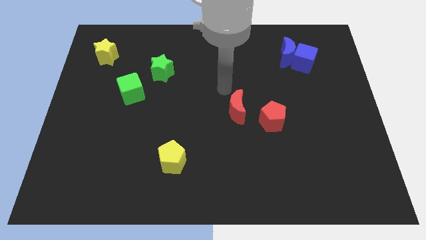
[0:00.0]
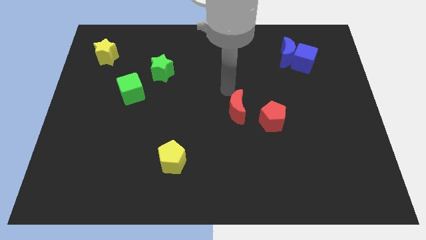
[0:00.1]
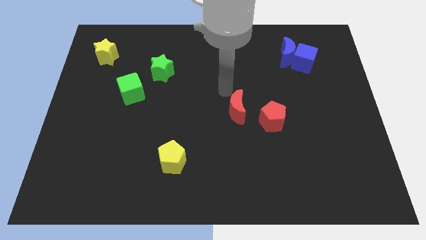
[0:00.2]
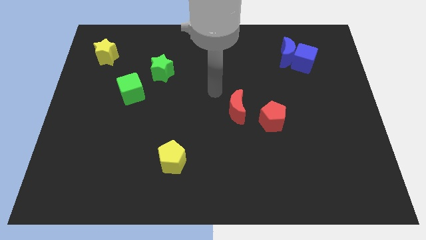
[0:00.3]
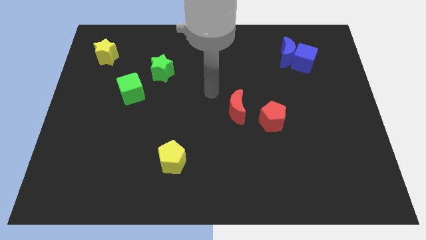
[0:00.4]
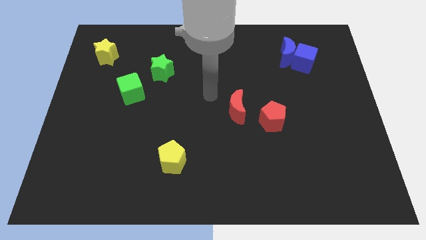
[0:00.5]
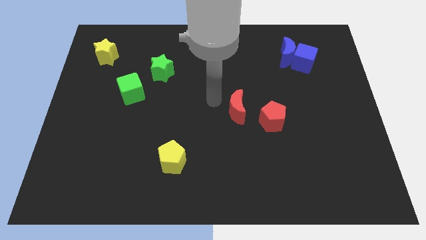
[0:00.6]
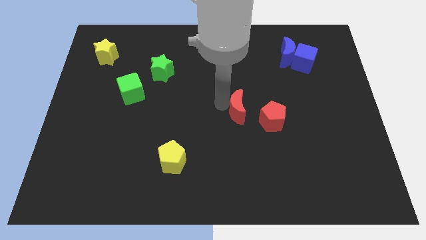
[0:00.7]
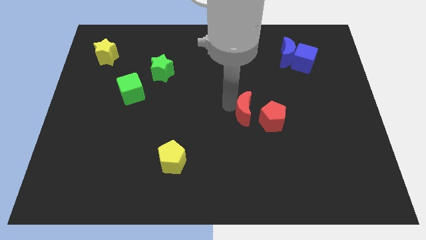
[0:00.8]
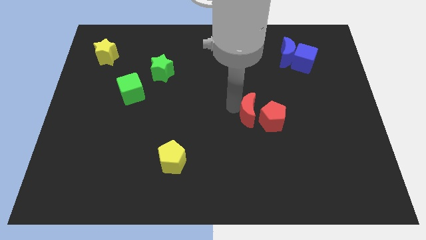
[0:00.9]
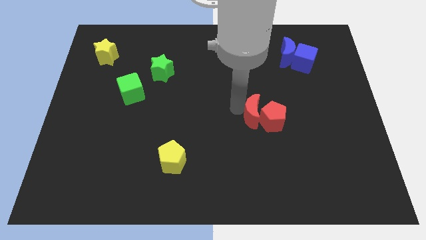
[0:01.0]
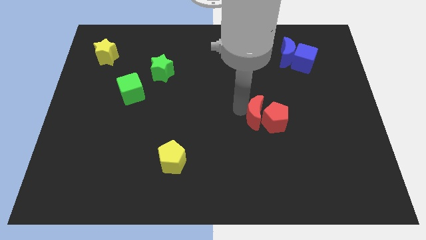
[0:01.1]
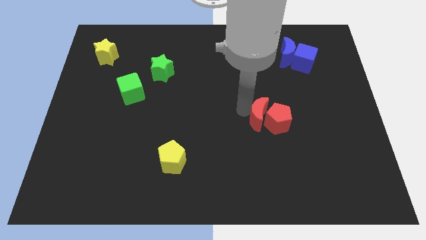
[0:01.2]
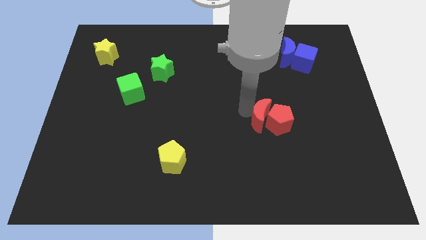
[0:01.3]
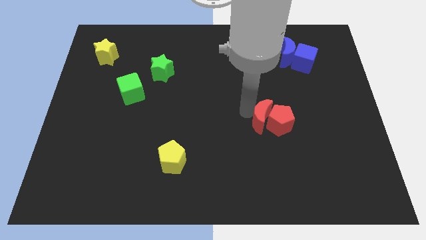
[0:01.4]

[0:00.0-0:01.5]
move the red crescent into red pentagon

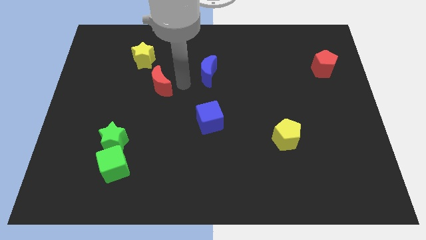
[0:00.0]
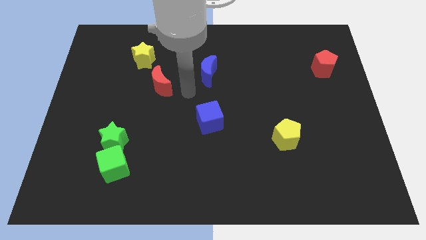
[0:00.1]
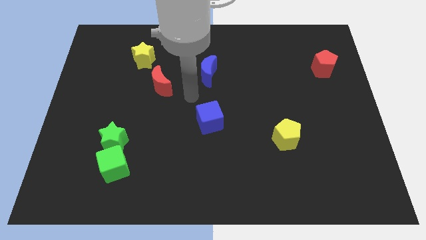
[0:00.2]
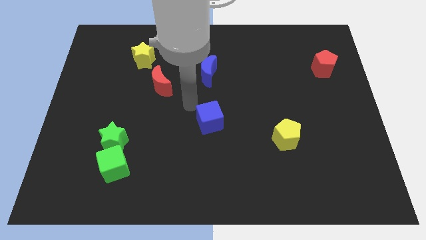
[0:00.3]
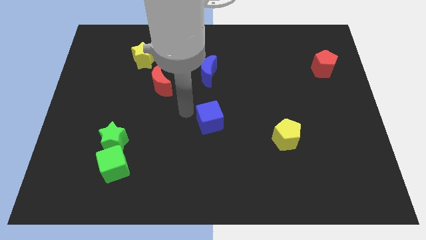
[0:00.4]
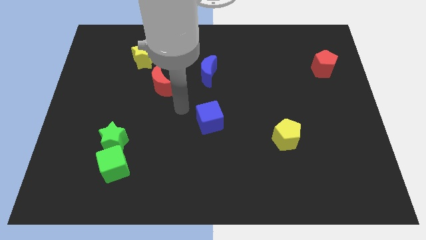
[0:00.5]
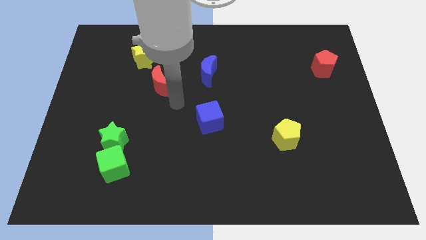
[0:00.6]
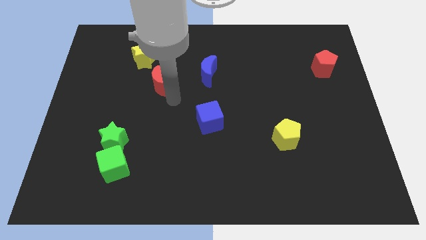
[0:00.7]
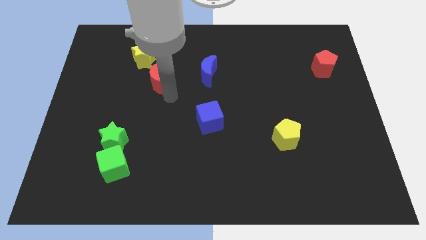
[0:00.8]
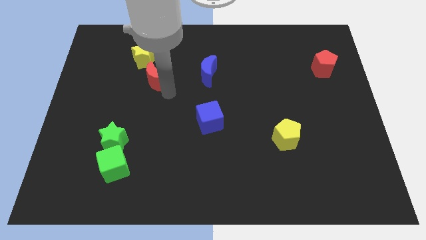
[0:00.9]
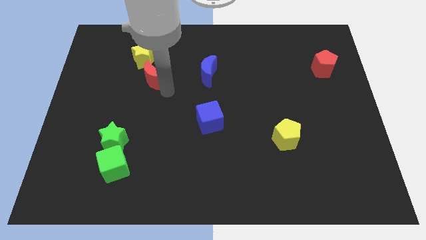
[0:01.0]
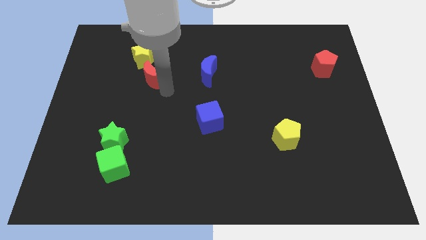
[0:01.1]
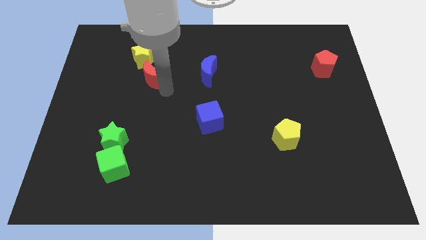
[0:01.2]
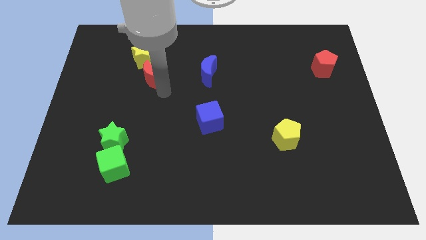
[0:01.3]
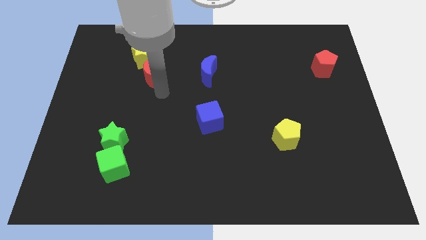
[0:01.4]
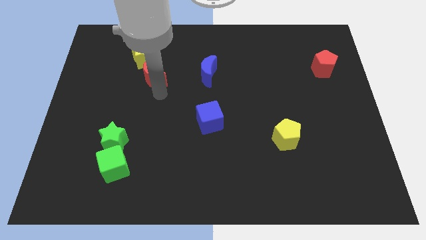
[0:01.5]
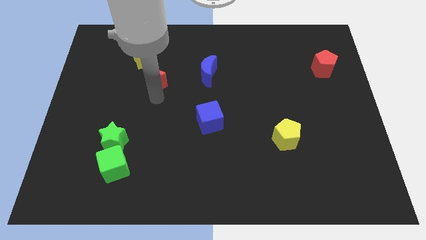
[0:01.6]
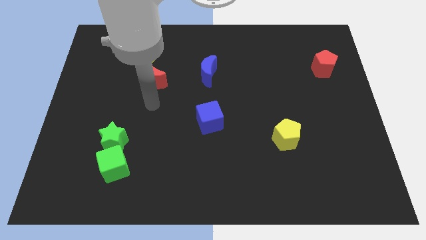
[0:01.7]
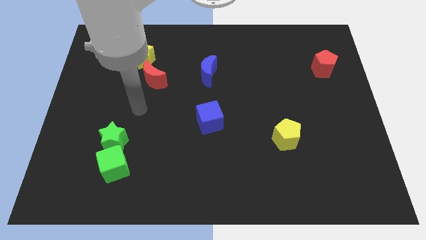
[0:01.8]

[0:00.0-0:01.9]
place the red crescent to the bottom right side of the yellow star

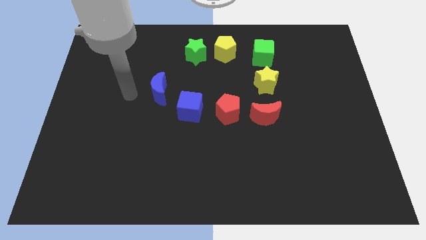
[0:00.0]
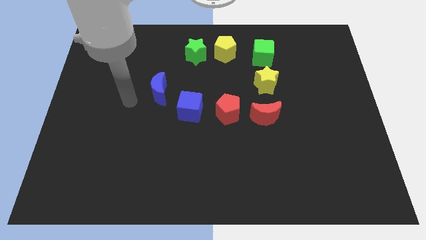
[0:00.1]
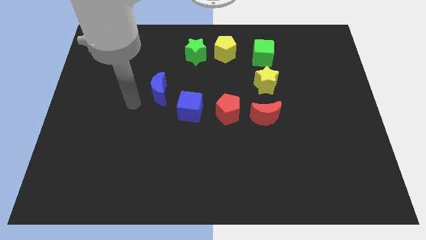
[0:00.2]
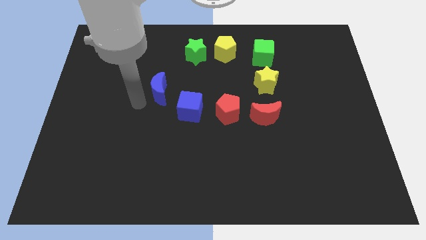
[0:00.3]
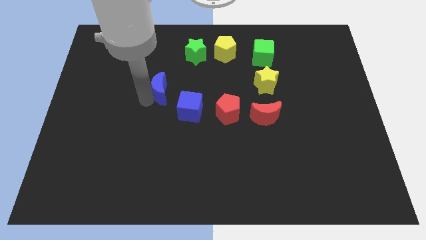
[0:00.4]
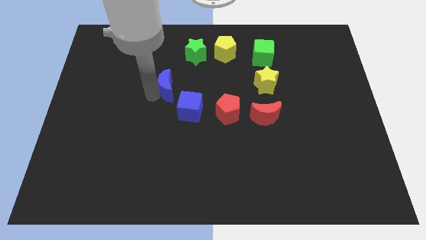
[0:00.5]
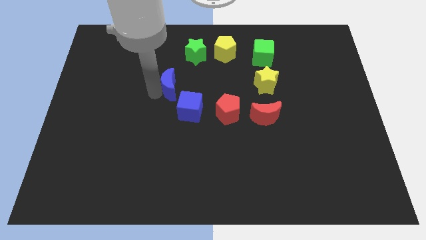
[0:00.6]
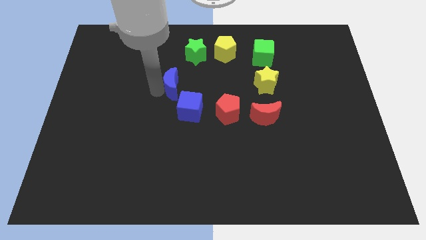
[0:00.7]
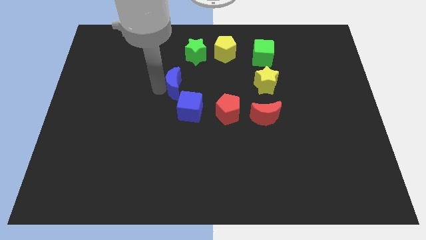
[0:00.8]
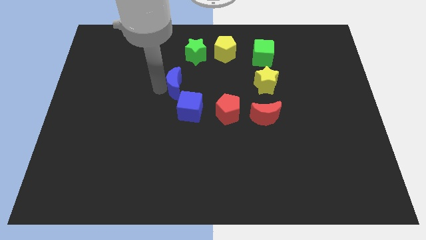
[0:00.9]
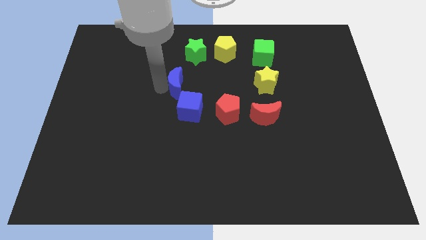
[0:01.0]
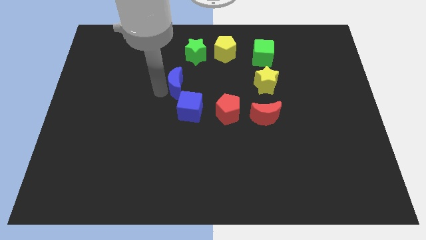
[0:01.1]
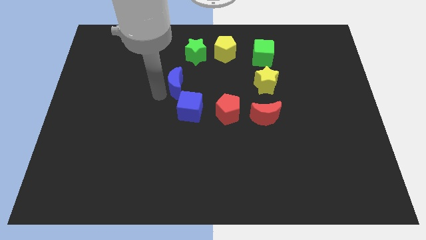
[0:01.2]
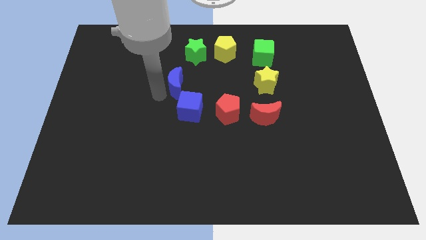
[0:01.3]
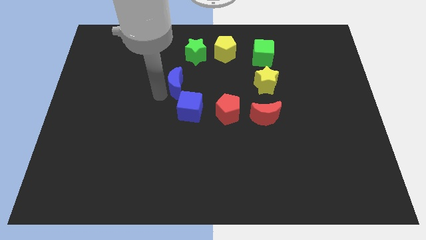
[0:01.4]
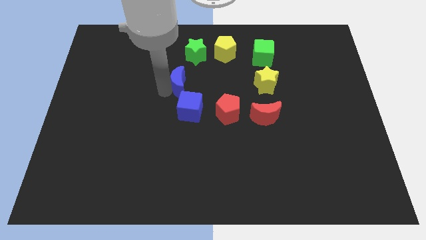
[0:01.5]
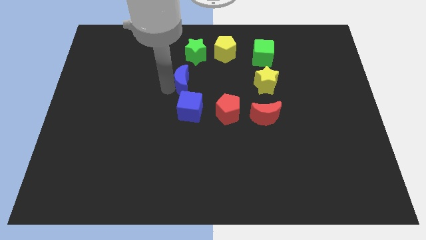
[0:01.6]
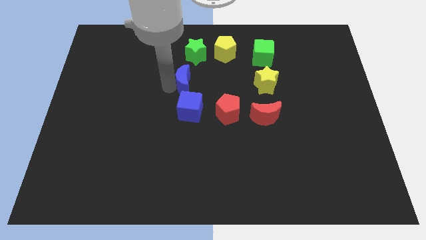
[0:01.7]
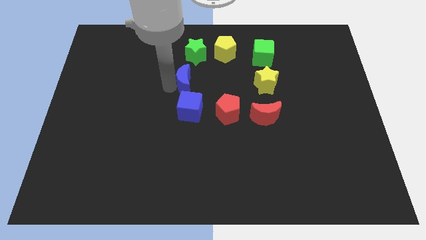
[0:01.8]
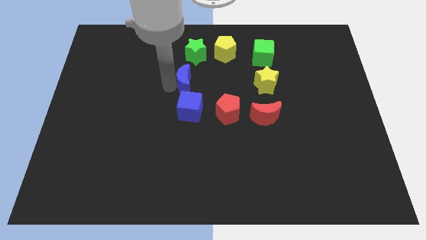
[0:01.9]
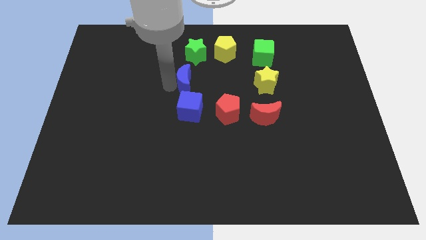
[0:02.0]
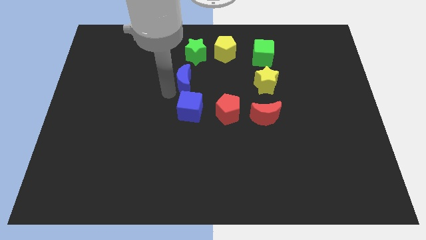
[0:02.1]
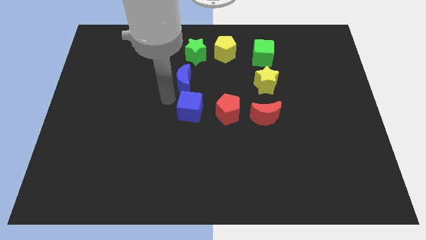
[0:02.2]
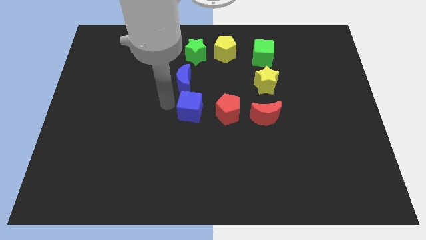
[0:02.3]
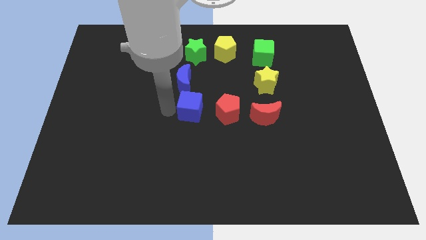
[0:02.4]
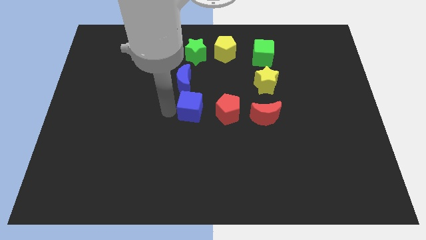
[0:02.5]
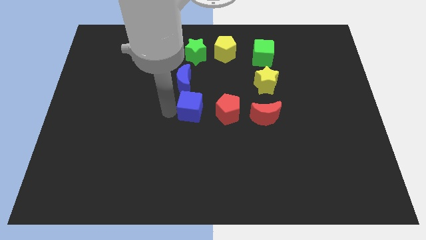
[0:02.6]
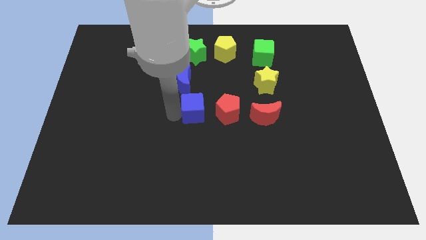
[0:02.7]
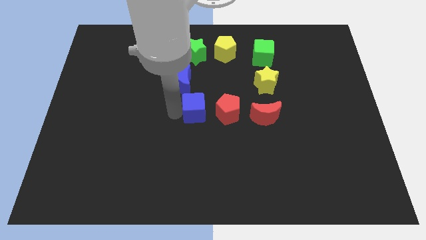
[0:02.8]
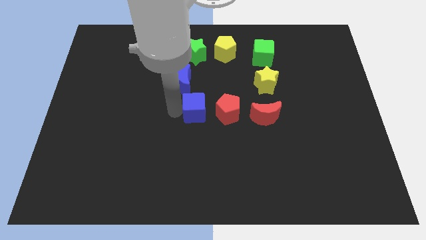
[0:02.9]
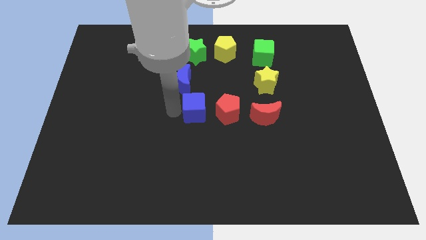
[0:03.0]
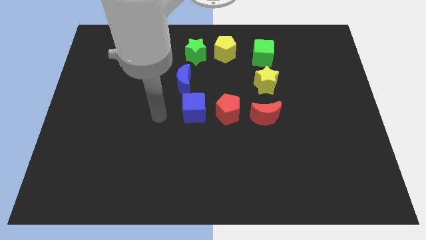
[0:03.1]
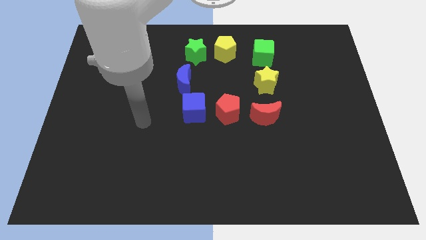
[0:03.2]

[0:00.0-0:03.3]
push the blue crescent parallel to the yellow star

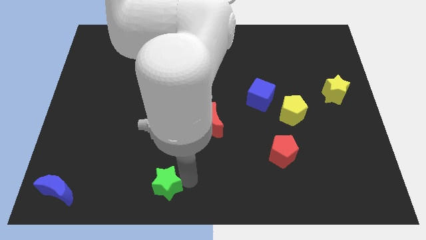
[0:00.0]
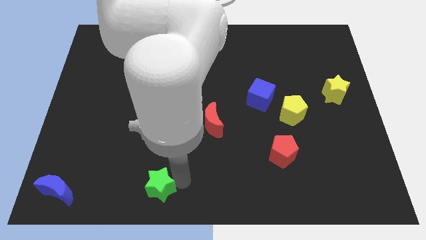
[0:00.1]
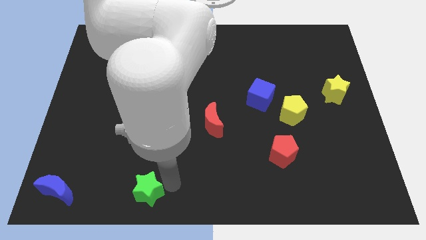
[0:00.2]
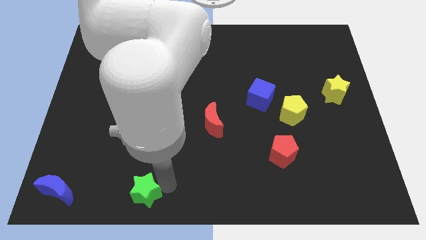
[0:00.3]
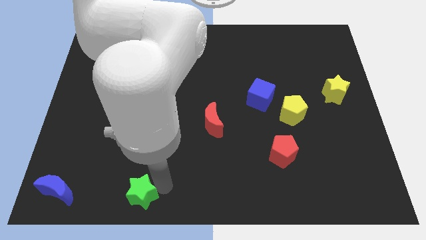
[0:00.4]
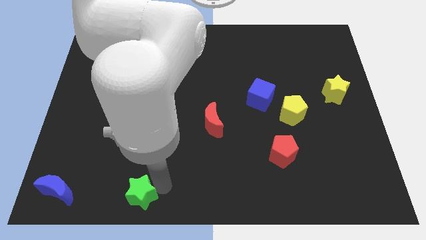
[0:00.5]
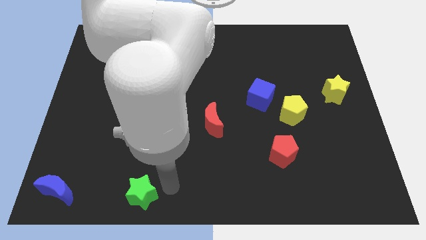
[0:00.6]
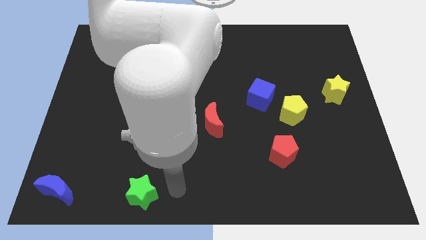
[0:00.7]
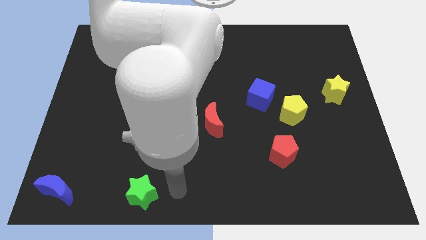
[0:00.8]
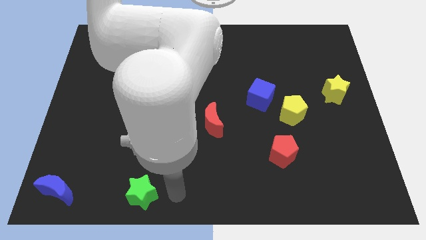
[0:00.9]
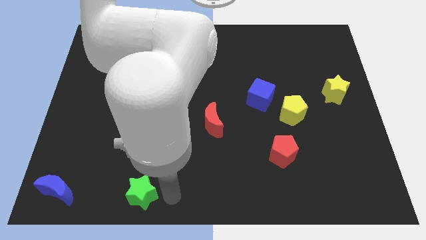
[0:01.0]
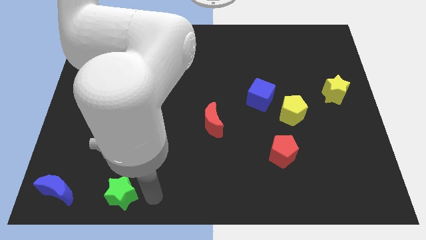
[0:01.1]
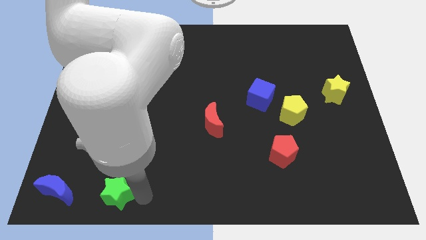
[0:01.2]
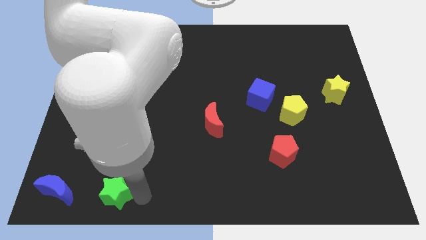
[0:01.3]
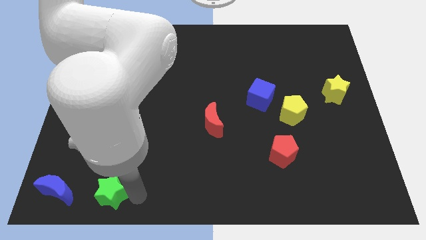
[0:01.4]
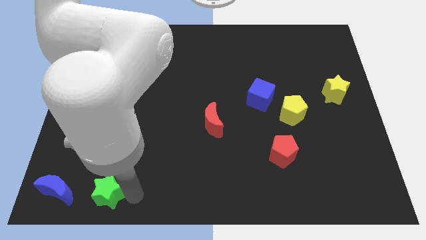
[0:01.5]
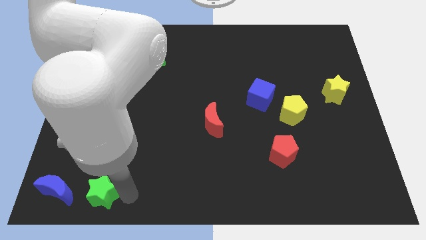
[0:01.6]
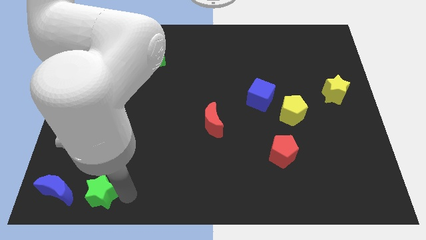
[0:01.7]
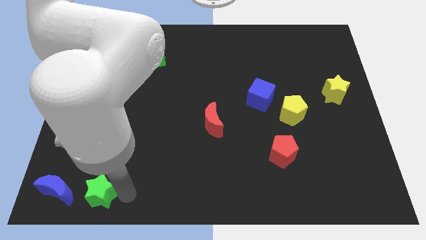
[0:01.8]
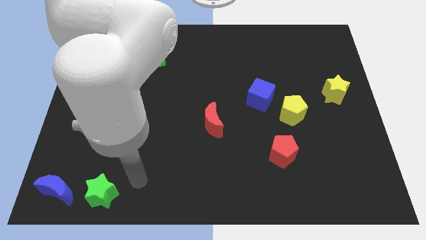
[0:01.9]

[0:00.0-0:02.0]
move the green star towards the blue moon

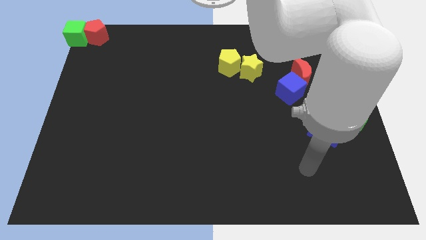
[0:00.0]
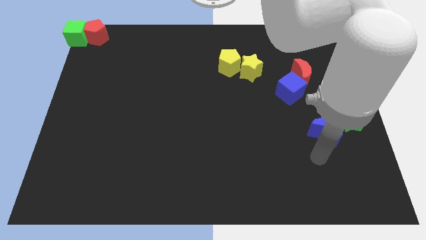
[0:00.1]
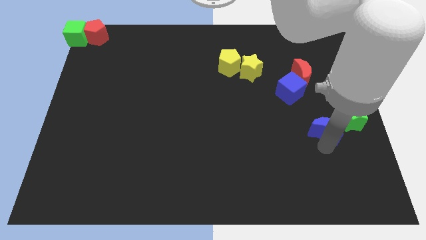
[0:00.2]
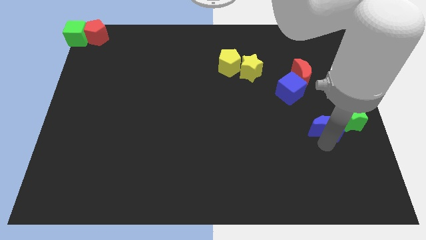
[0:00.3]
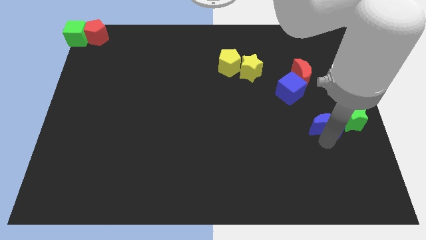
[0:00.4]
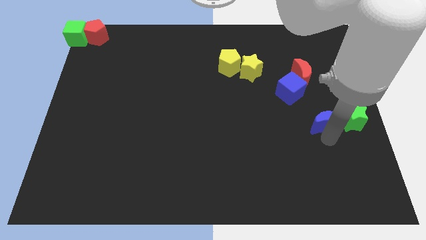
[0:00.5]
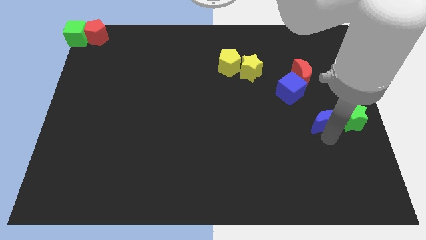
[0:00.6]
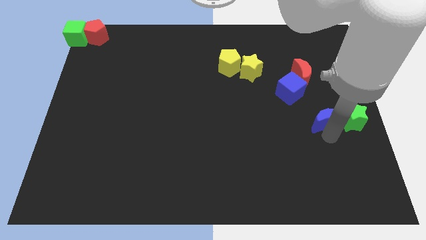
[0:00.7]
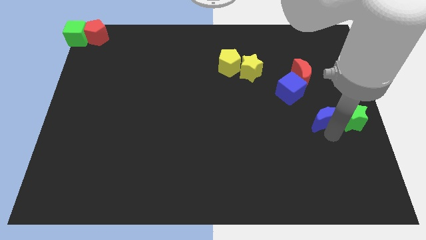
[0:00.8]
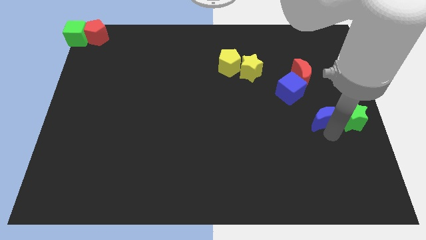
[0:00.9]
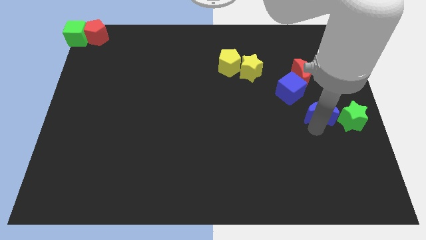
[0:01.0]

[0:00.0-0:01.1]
place the blue moon to the left of the green star
